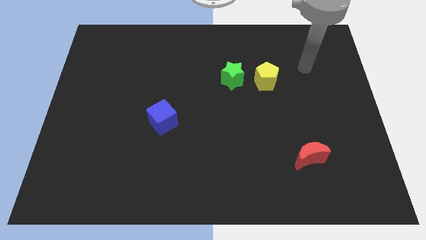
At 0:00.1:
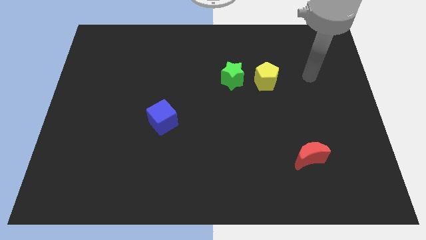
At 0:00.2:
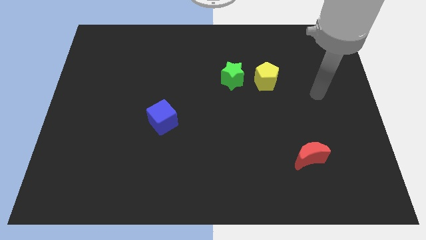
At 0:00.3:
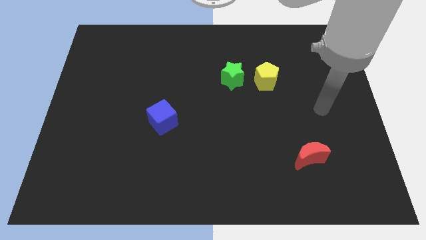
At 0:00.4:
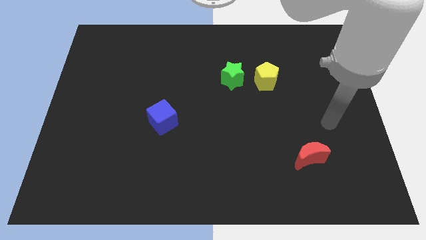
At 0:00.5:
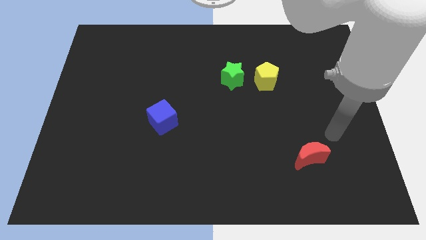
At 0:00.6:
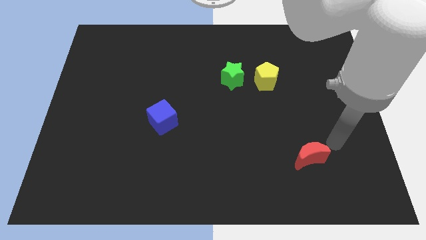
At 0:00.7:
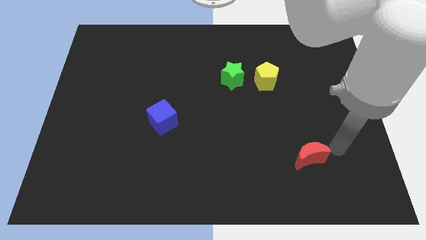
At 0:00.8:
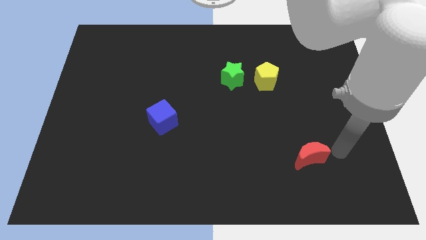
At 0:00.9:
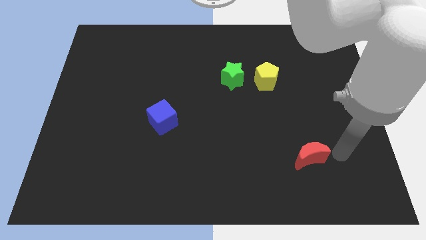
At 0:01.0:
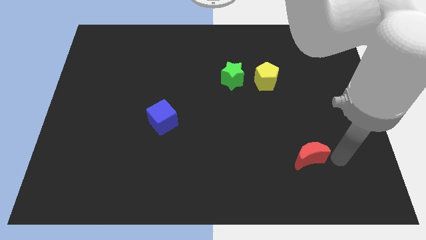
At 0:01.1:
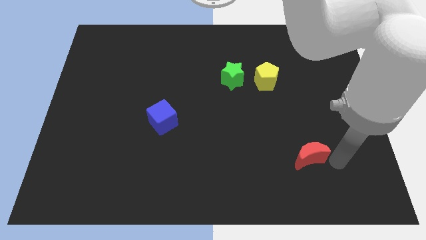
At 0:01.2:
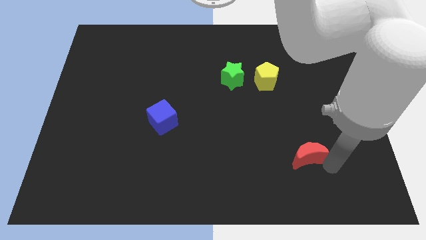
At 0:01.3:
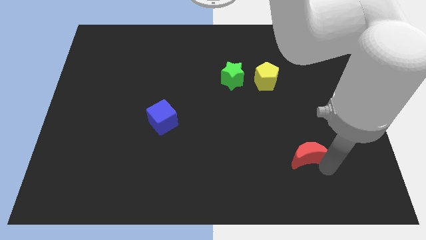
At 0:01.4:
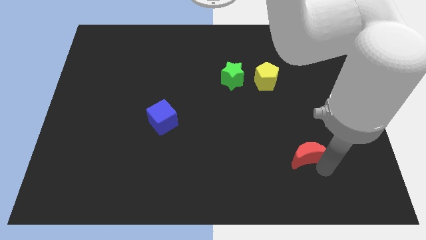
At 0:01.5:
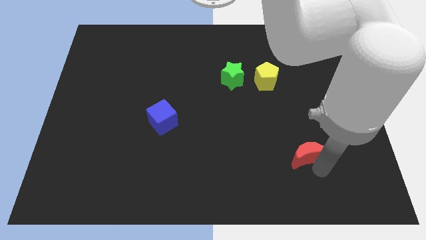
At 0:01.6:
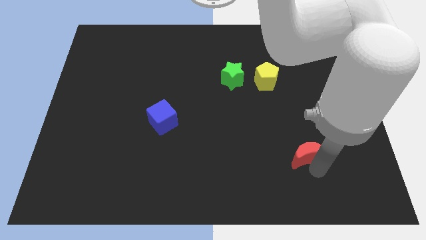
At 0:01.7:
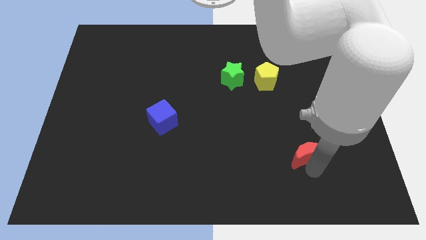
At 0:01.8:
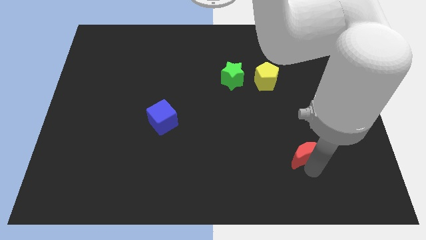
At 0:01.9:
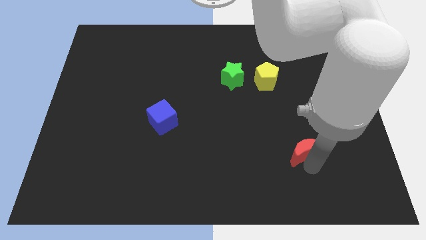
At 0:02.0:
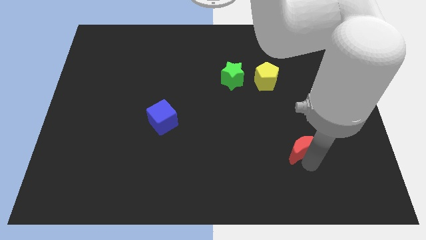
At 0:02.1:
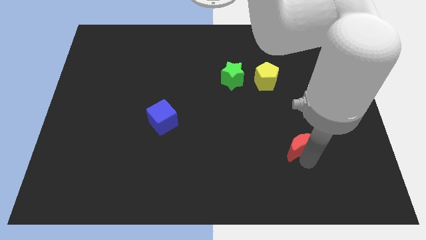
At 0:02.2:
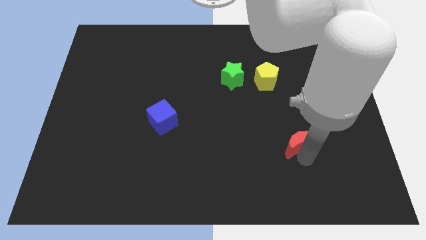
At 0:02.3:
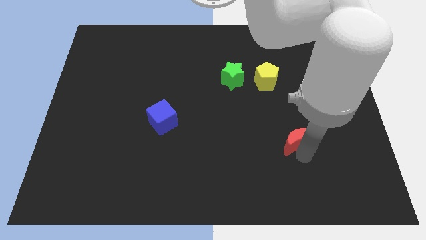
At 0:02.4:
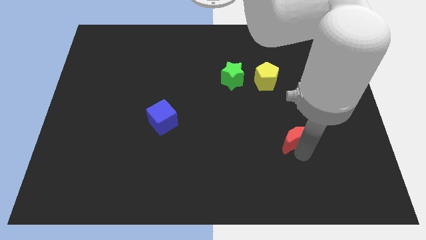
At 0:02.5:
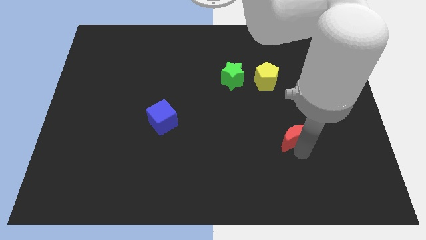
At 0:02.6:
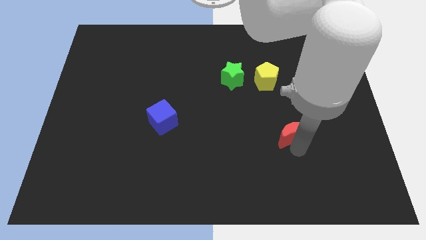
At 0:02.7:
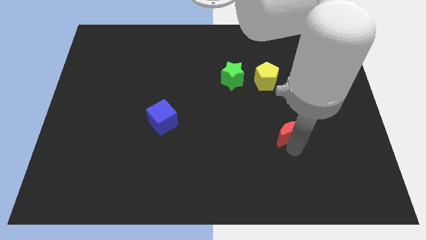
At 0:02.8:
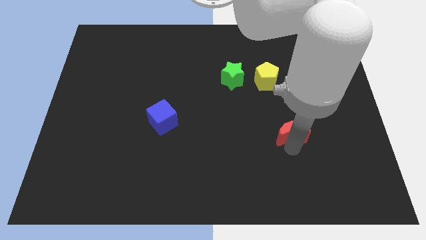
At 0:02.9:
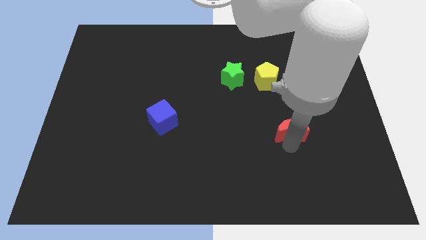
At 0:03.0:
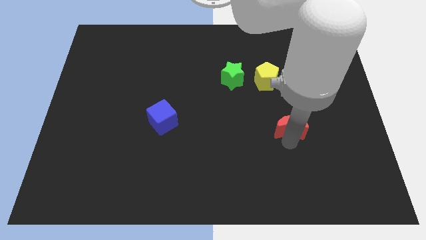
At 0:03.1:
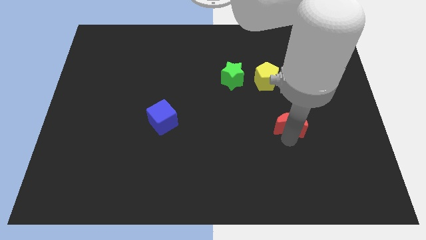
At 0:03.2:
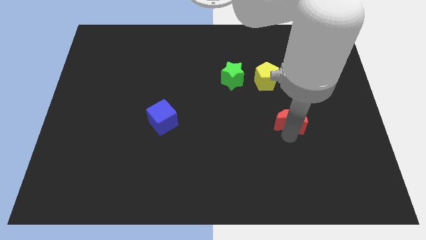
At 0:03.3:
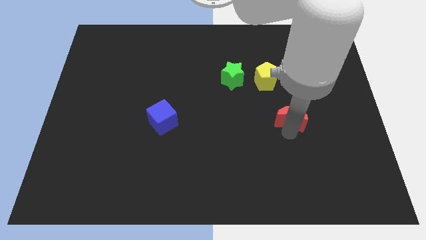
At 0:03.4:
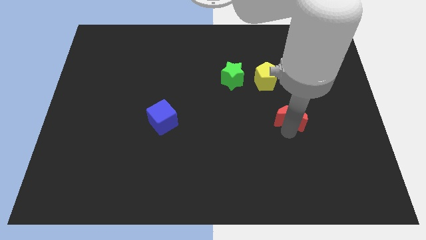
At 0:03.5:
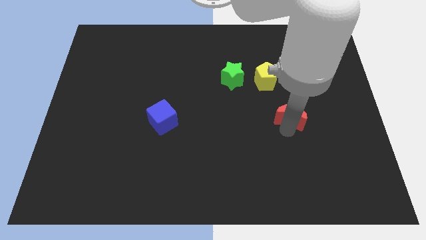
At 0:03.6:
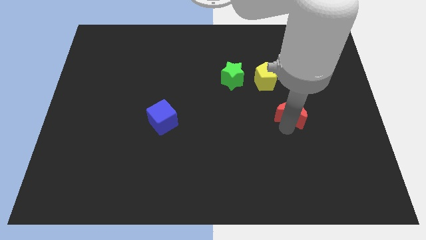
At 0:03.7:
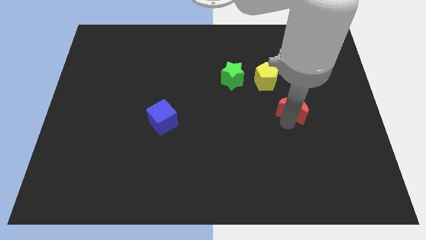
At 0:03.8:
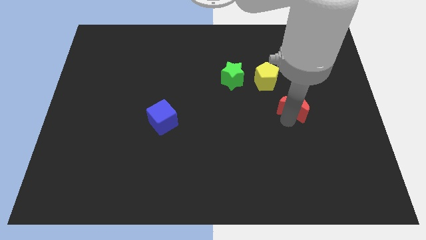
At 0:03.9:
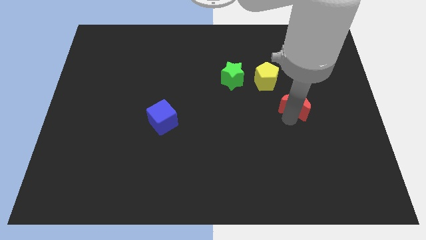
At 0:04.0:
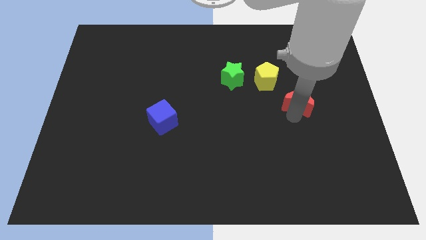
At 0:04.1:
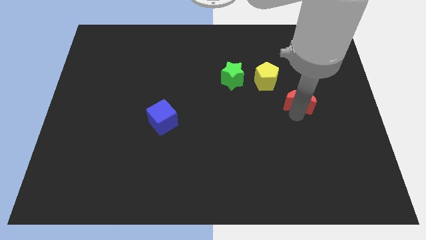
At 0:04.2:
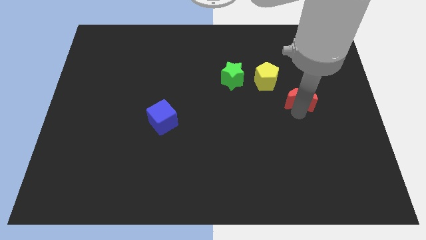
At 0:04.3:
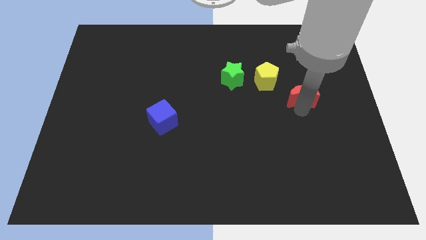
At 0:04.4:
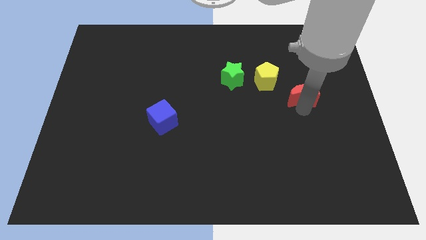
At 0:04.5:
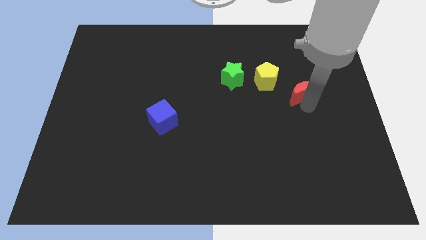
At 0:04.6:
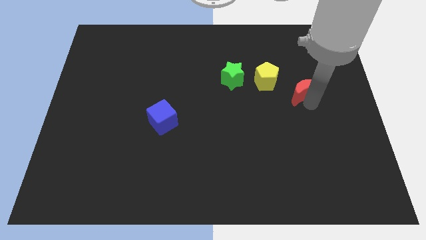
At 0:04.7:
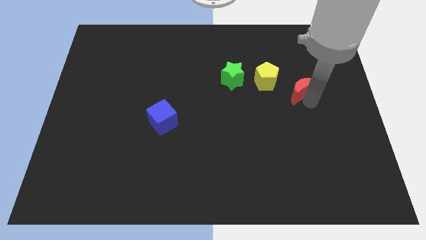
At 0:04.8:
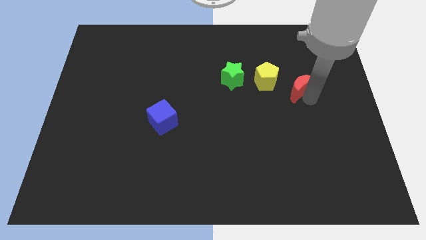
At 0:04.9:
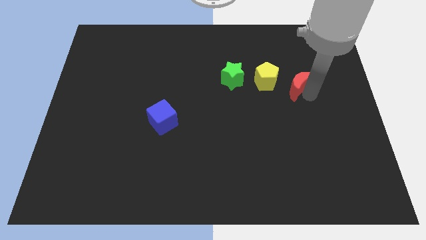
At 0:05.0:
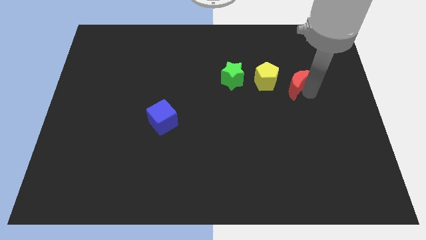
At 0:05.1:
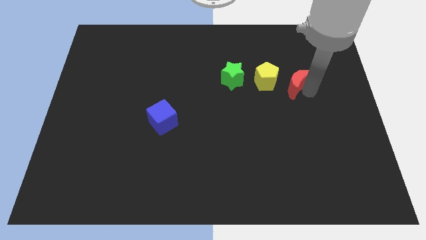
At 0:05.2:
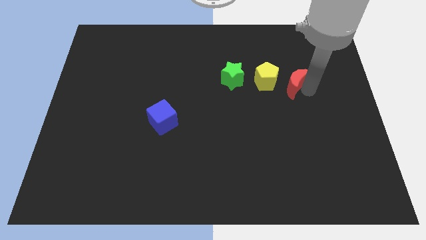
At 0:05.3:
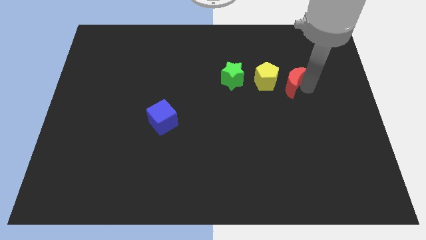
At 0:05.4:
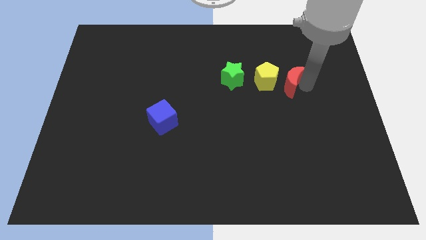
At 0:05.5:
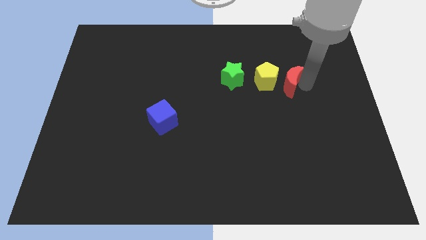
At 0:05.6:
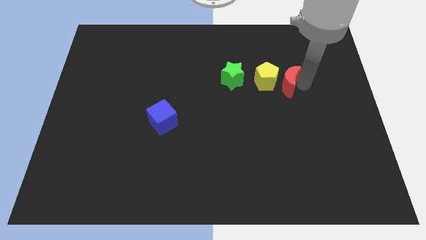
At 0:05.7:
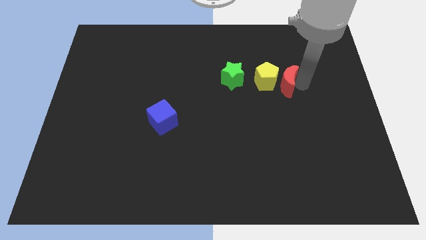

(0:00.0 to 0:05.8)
move the red block next to the pentagon

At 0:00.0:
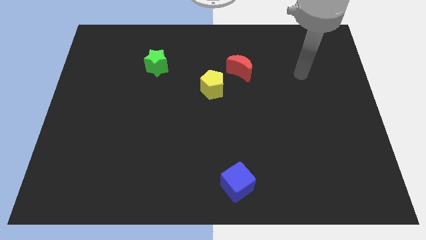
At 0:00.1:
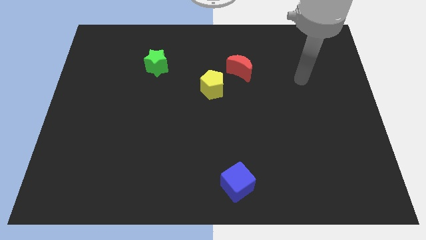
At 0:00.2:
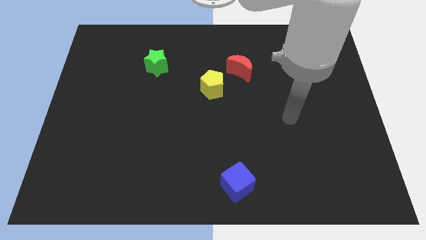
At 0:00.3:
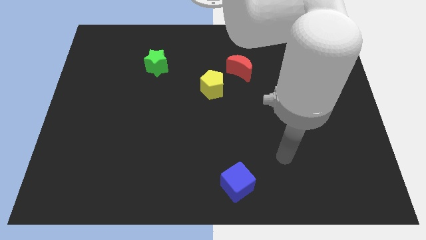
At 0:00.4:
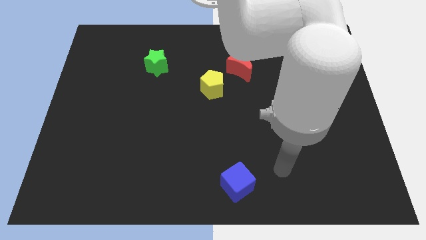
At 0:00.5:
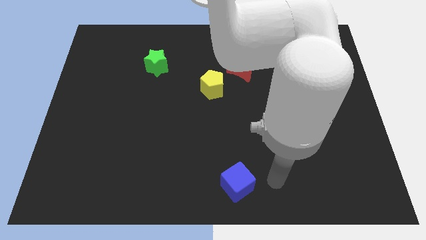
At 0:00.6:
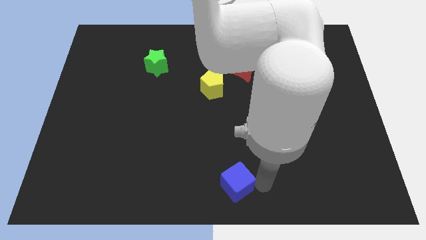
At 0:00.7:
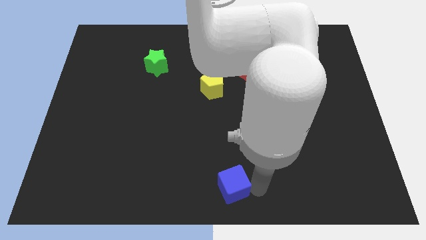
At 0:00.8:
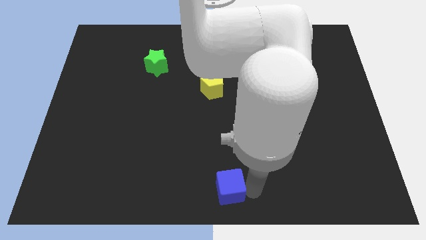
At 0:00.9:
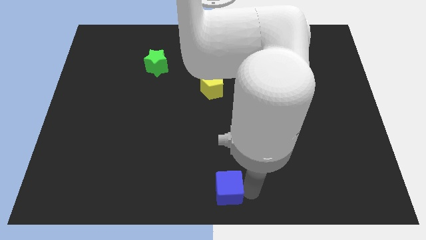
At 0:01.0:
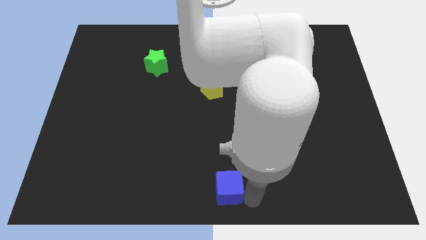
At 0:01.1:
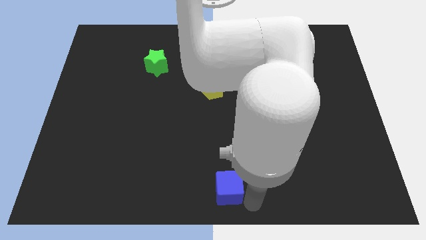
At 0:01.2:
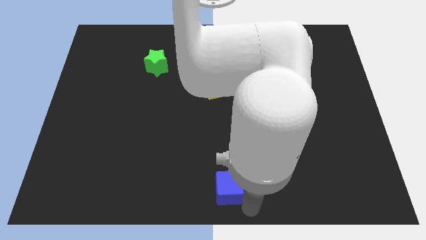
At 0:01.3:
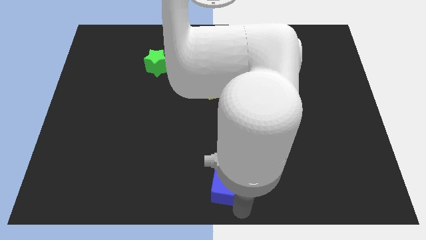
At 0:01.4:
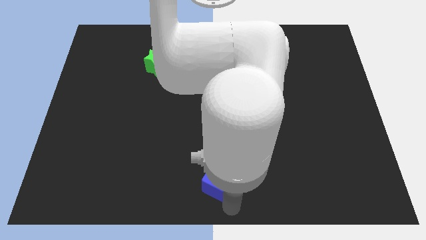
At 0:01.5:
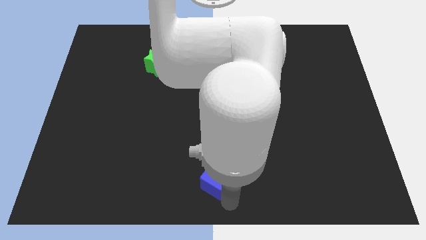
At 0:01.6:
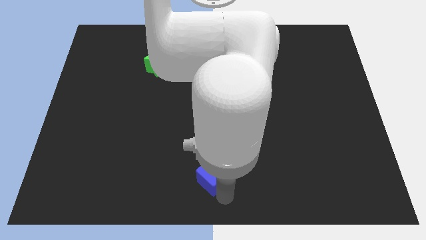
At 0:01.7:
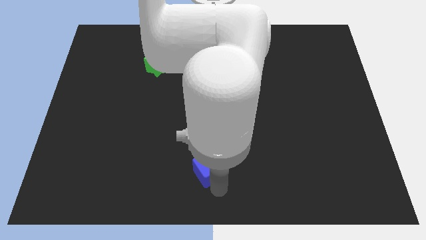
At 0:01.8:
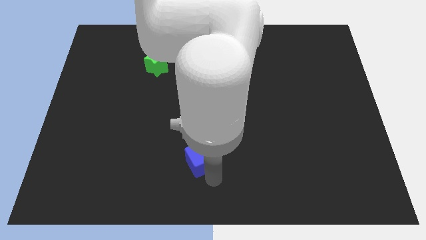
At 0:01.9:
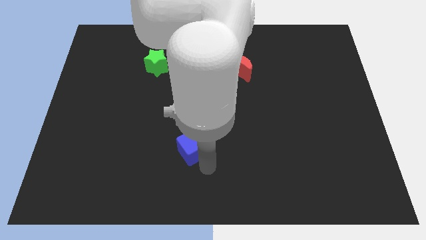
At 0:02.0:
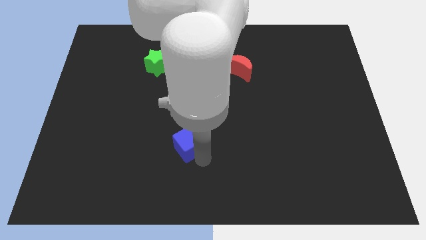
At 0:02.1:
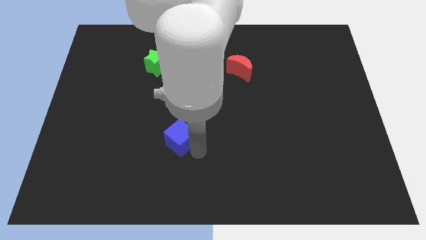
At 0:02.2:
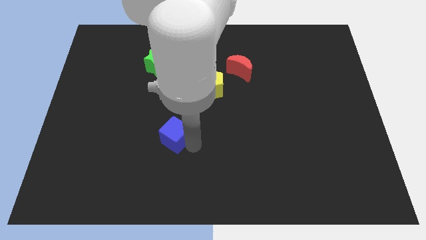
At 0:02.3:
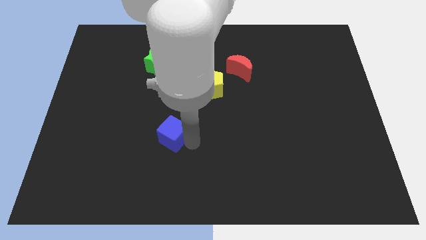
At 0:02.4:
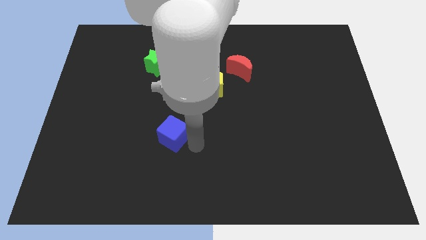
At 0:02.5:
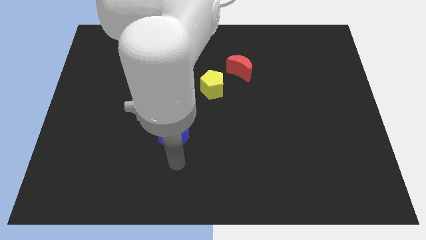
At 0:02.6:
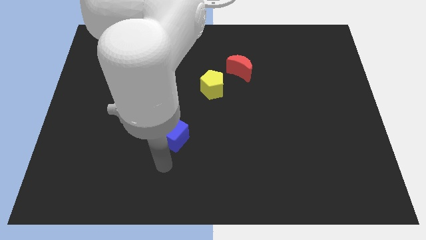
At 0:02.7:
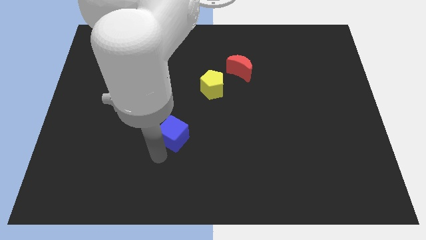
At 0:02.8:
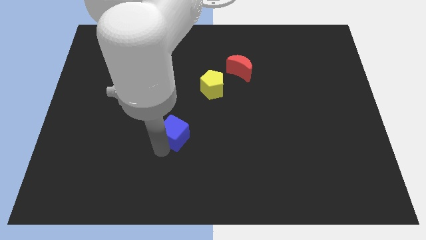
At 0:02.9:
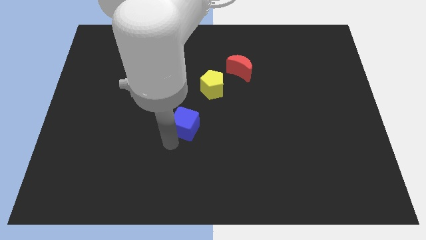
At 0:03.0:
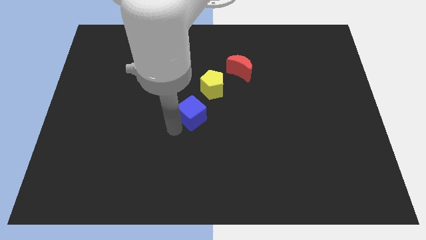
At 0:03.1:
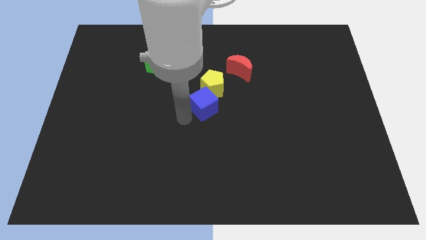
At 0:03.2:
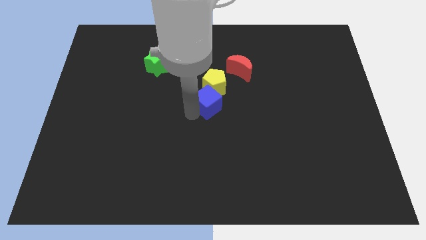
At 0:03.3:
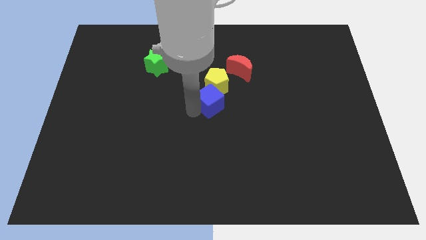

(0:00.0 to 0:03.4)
slide the blue block close to the yellow block
